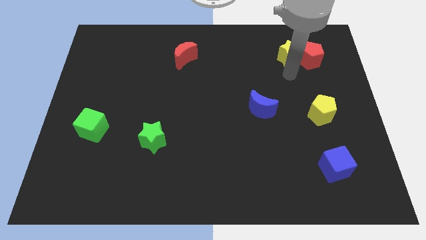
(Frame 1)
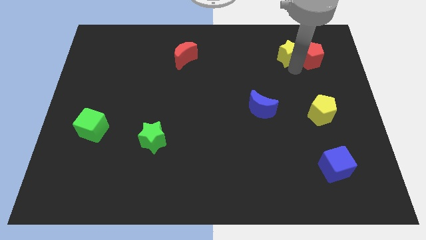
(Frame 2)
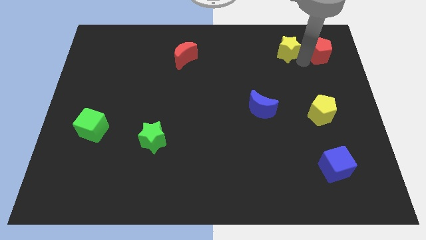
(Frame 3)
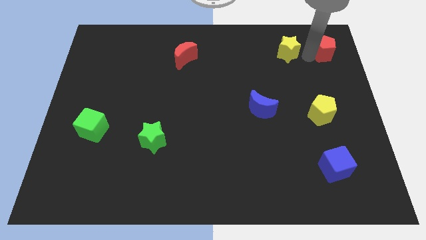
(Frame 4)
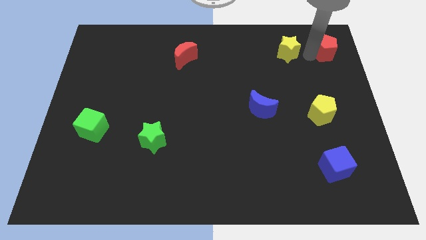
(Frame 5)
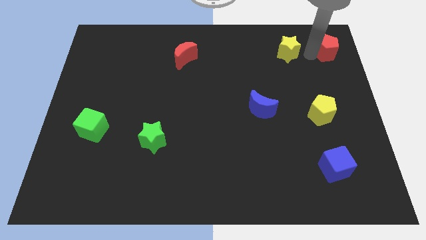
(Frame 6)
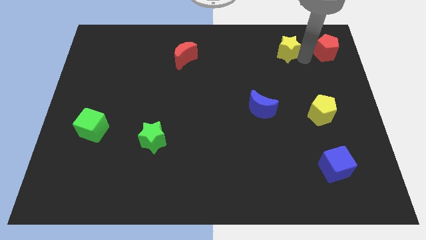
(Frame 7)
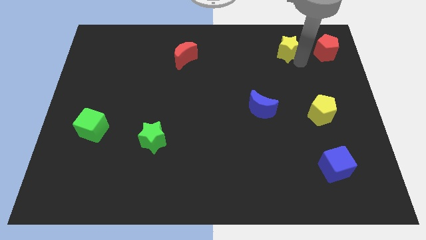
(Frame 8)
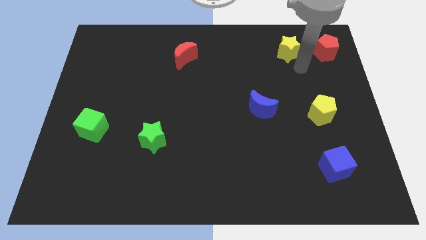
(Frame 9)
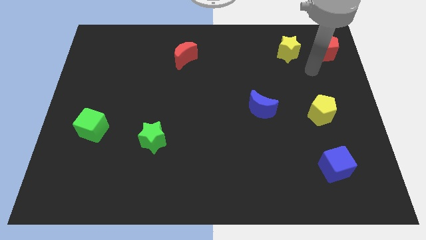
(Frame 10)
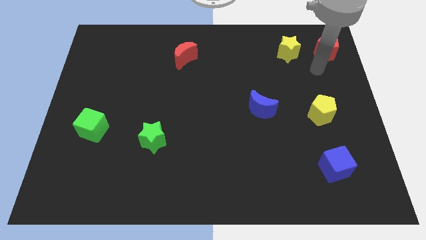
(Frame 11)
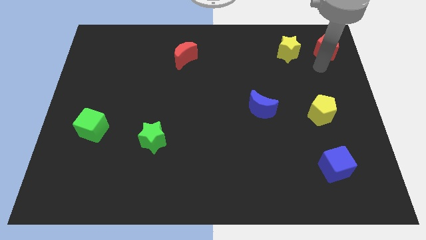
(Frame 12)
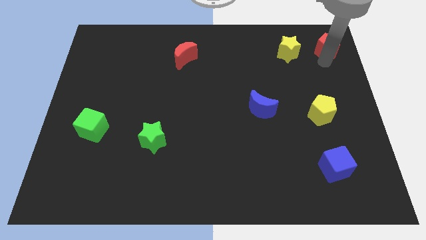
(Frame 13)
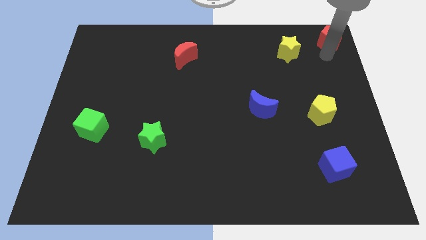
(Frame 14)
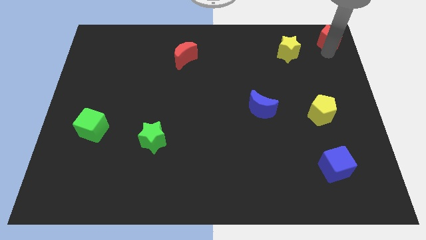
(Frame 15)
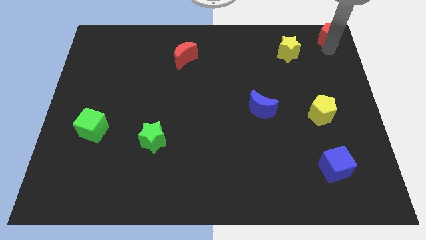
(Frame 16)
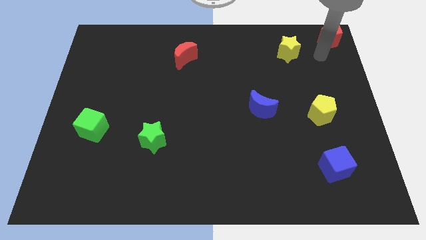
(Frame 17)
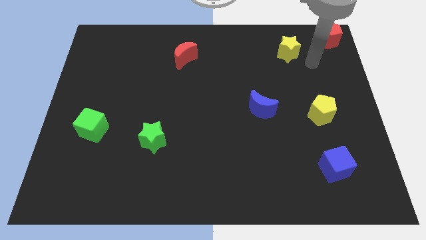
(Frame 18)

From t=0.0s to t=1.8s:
separate the red pentagon from the yellow star

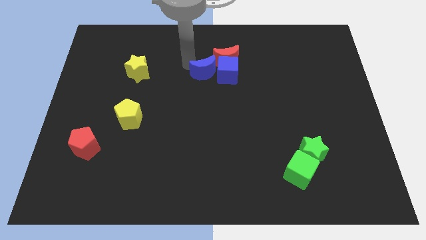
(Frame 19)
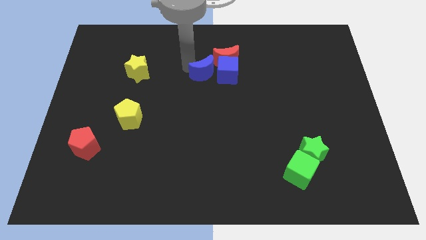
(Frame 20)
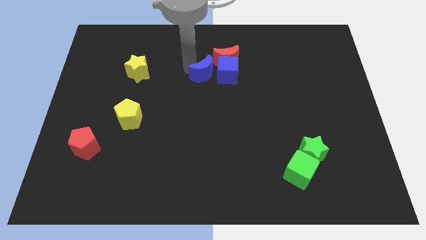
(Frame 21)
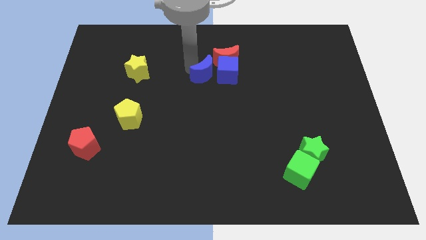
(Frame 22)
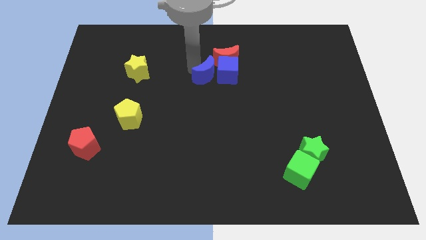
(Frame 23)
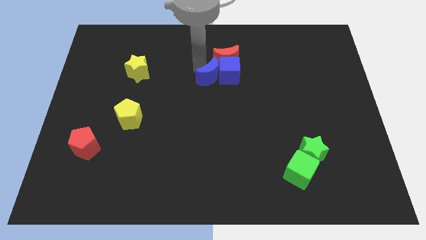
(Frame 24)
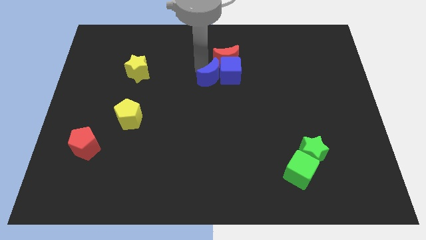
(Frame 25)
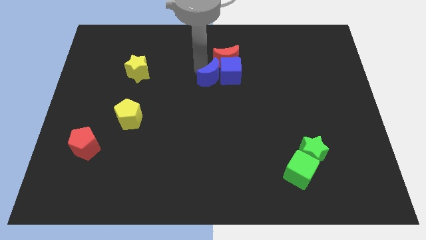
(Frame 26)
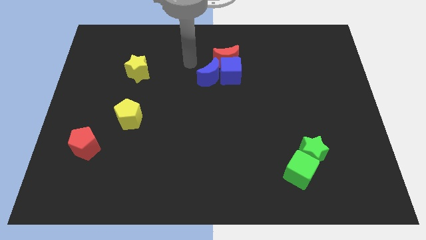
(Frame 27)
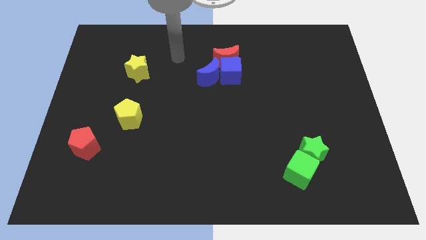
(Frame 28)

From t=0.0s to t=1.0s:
make the blue crescent to touch the left side of the blue cube

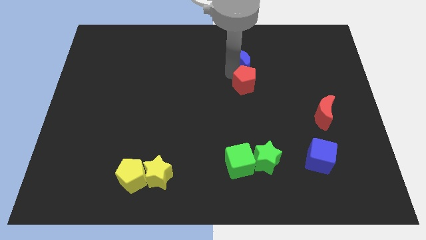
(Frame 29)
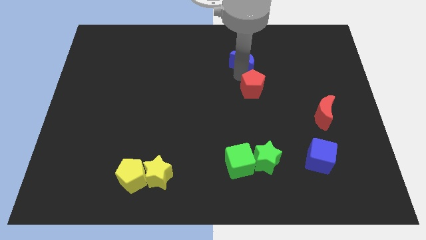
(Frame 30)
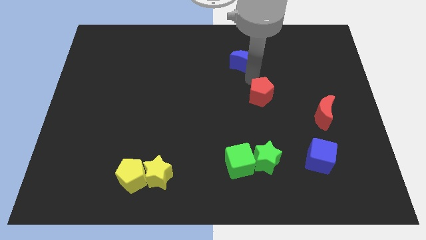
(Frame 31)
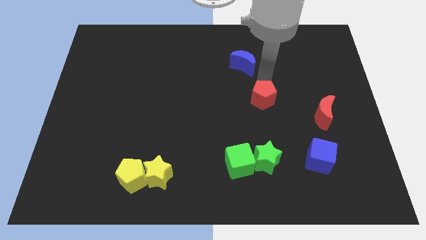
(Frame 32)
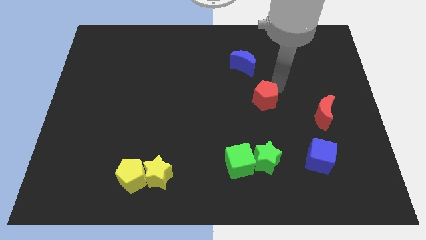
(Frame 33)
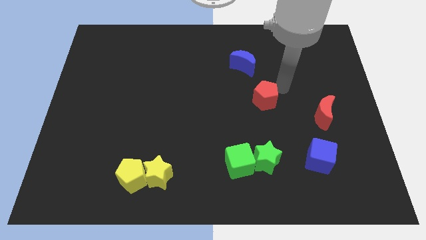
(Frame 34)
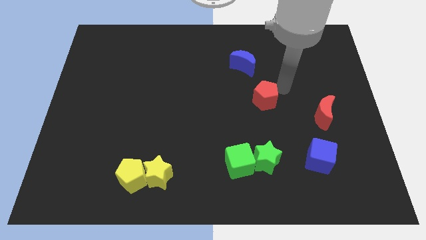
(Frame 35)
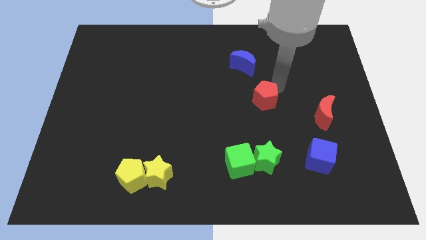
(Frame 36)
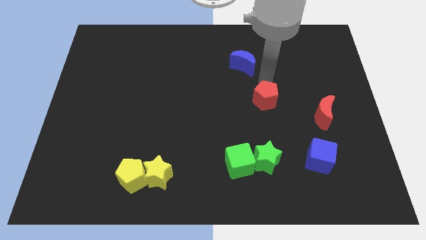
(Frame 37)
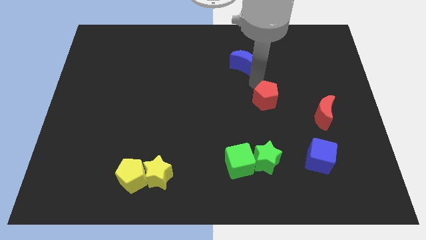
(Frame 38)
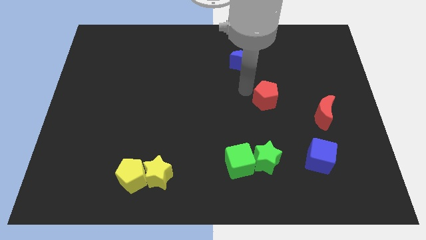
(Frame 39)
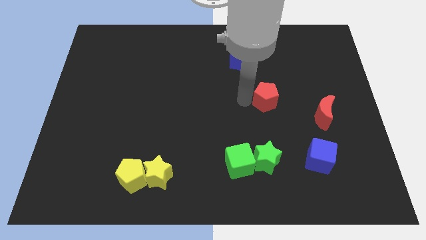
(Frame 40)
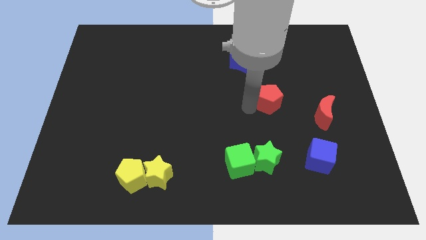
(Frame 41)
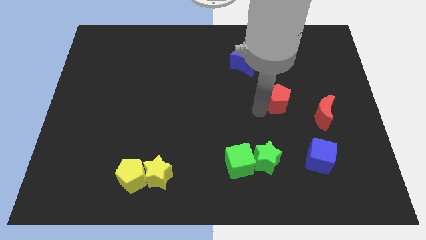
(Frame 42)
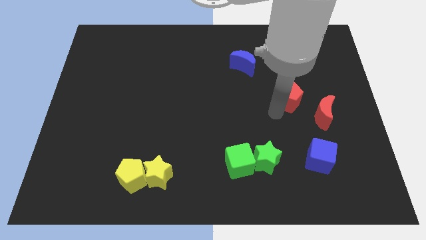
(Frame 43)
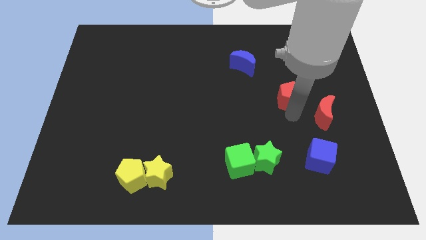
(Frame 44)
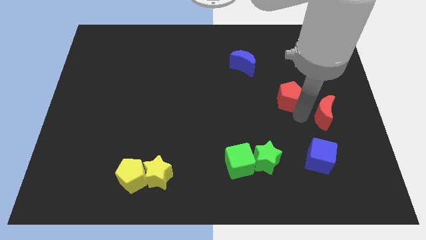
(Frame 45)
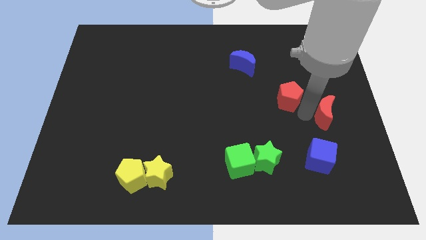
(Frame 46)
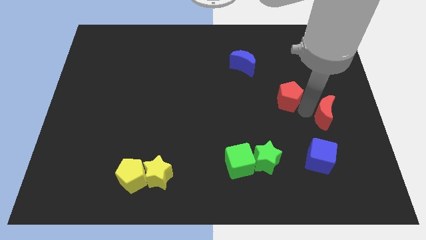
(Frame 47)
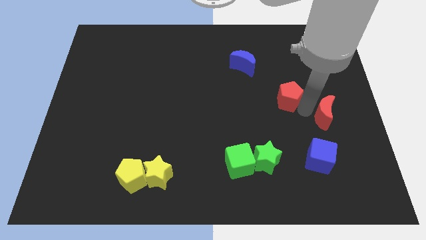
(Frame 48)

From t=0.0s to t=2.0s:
slightly move the red pentagon towards bottom

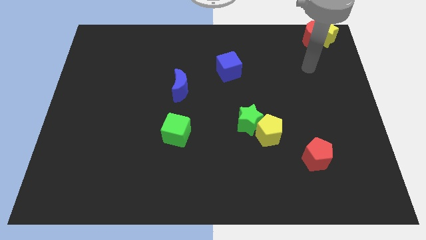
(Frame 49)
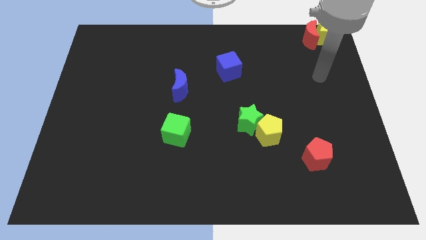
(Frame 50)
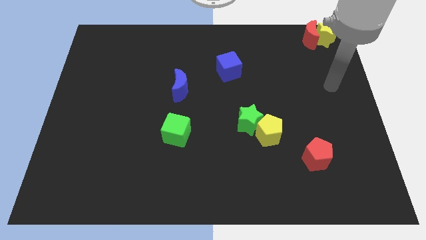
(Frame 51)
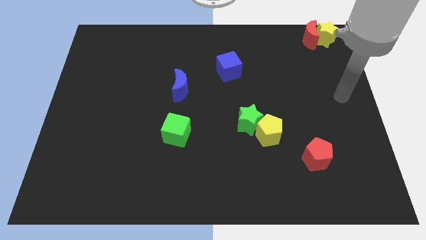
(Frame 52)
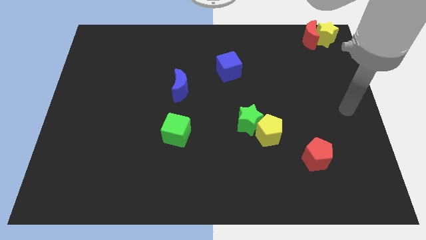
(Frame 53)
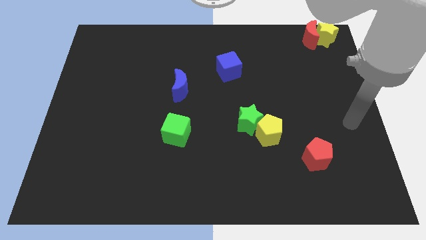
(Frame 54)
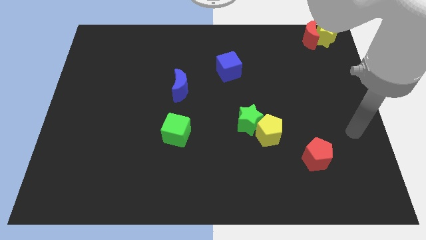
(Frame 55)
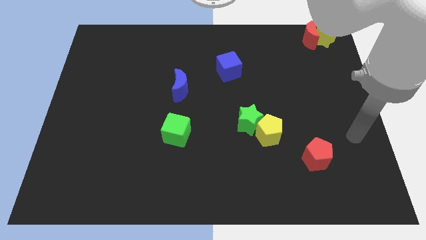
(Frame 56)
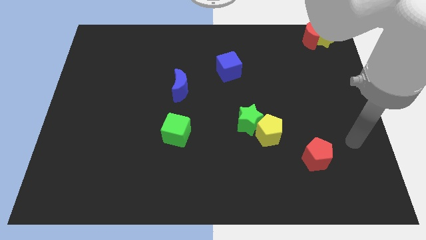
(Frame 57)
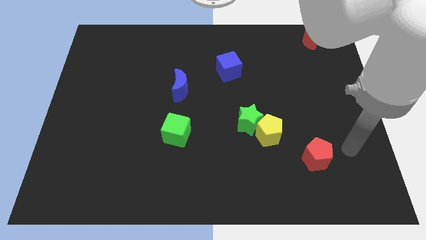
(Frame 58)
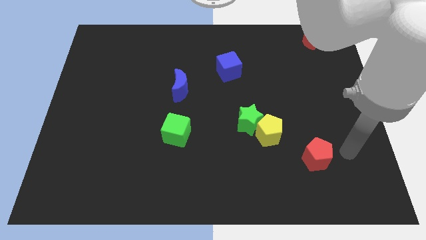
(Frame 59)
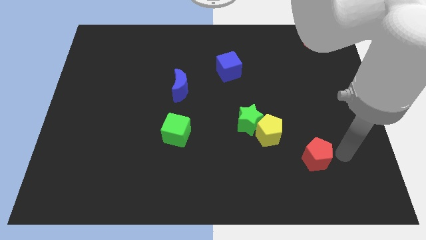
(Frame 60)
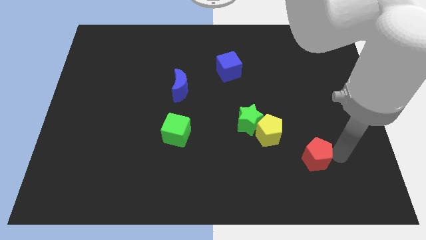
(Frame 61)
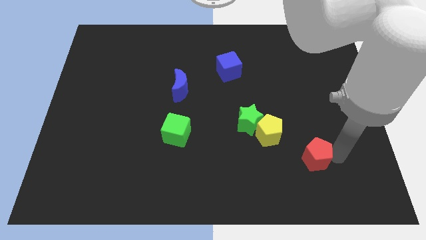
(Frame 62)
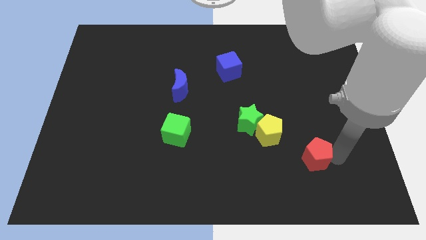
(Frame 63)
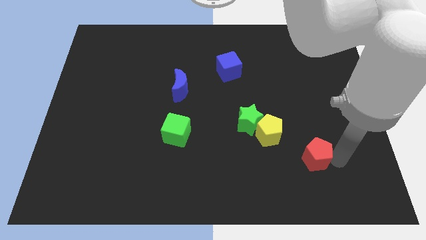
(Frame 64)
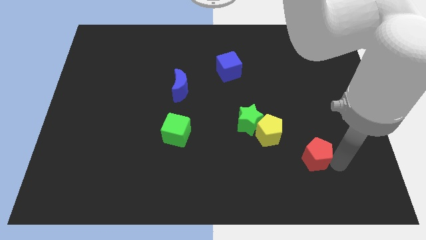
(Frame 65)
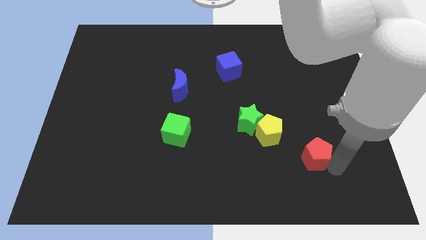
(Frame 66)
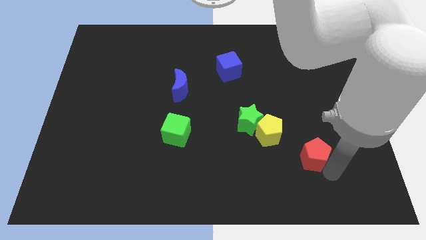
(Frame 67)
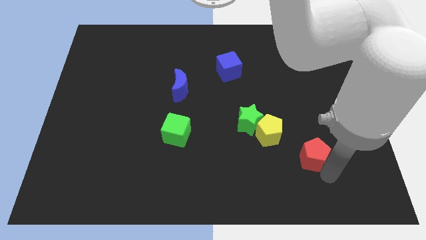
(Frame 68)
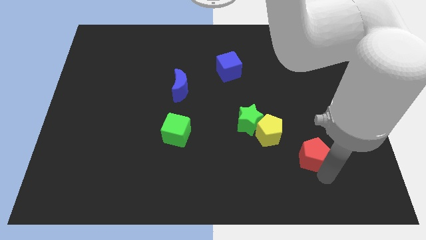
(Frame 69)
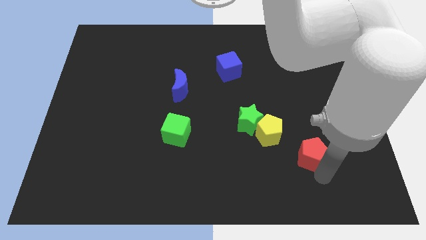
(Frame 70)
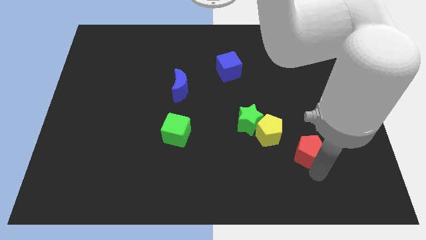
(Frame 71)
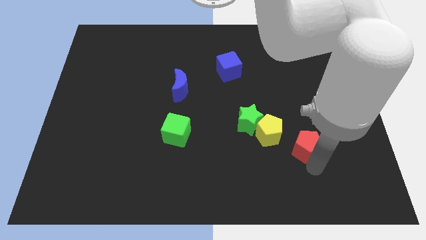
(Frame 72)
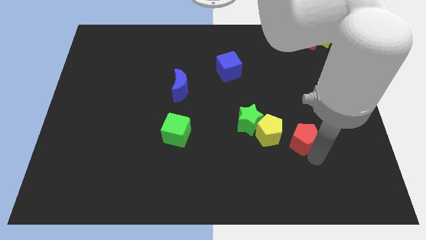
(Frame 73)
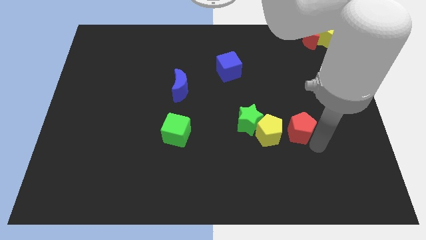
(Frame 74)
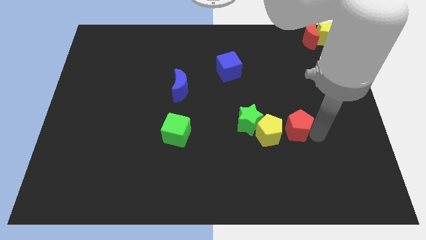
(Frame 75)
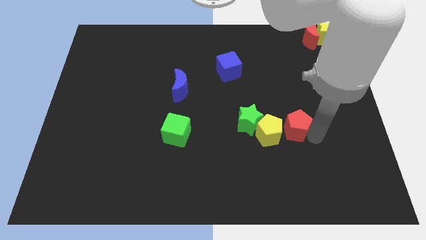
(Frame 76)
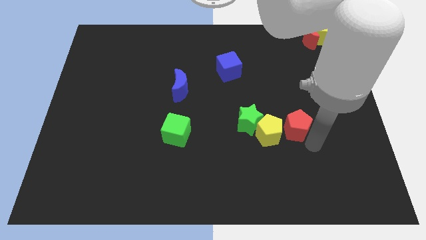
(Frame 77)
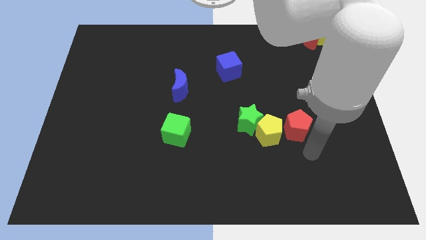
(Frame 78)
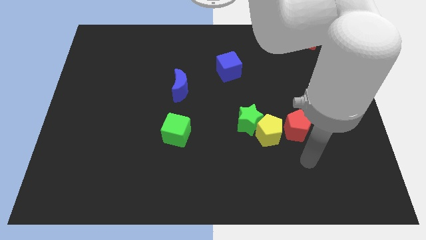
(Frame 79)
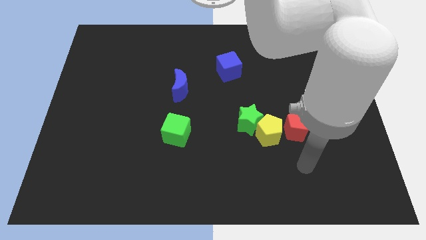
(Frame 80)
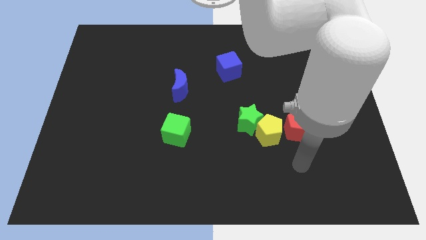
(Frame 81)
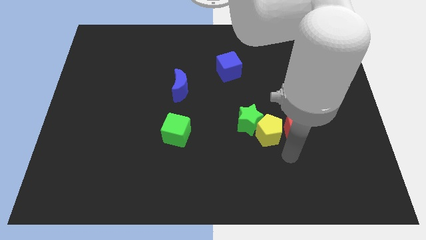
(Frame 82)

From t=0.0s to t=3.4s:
push the red pentagon to the right side of the yellow pentagon

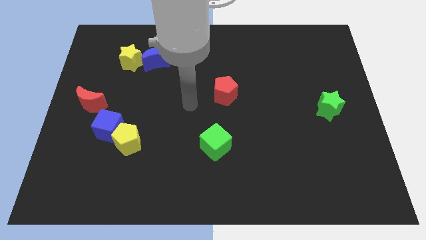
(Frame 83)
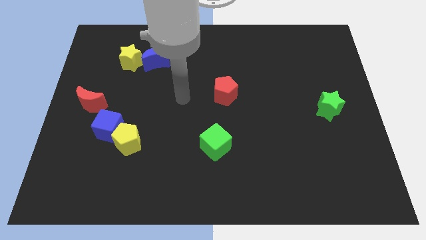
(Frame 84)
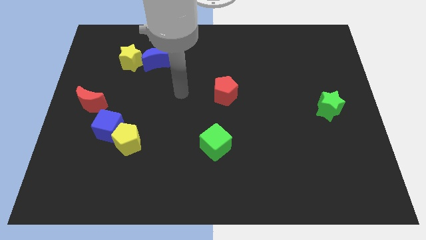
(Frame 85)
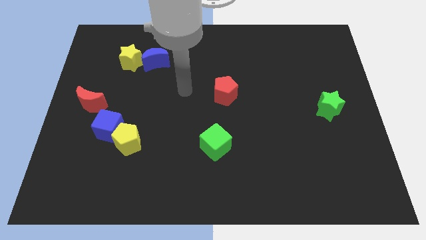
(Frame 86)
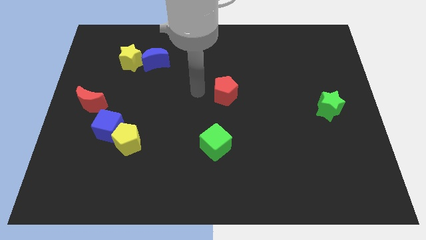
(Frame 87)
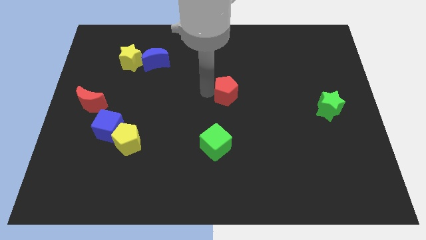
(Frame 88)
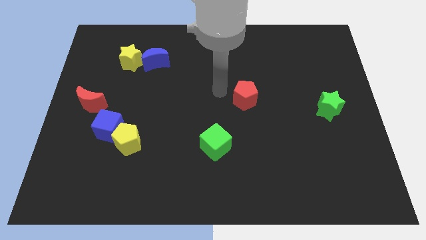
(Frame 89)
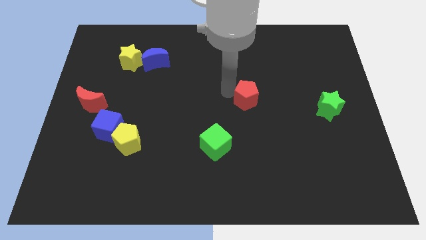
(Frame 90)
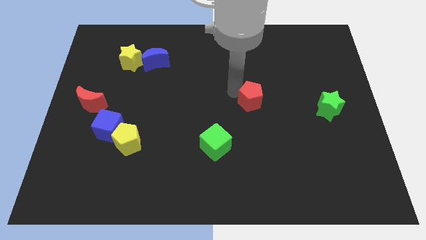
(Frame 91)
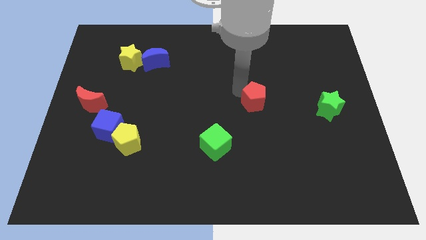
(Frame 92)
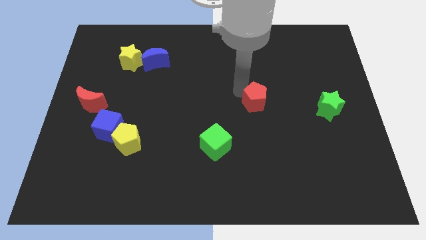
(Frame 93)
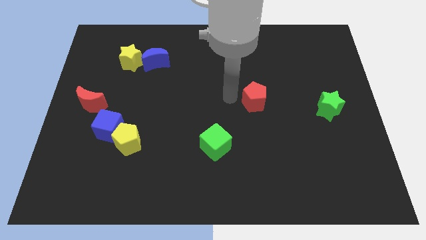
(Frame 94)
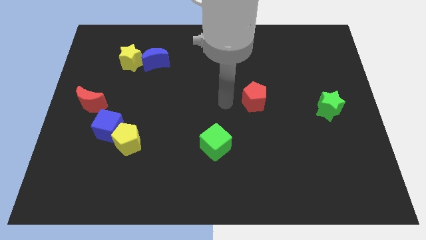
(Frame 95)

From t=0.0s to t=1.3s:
push the red pentagon to the top right of the green cube
